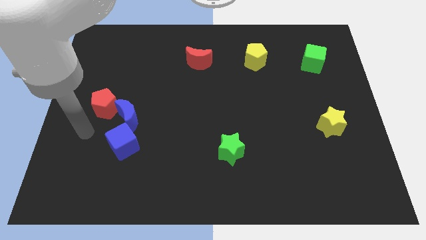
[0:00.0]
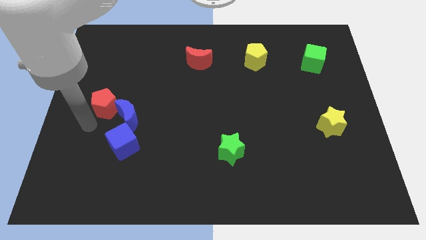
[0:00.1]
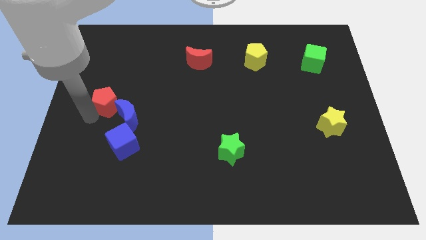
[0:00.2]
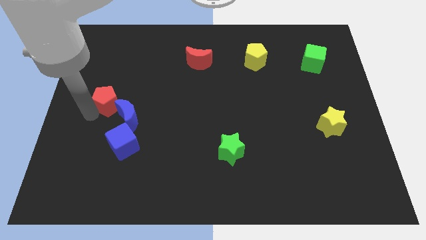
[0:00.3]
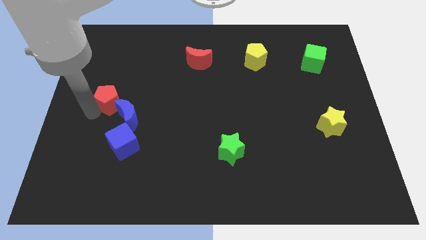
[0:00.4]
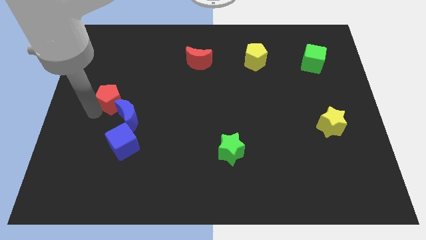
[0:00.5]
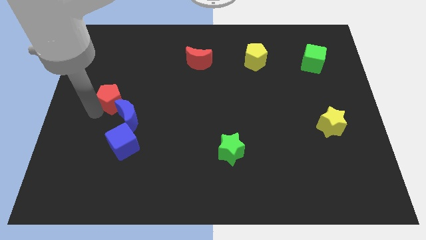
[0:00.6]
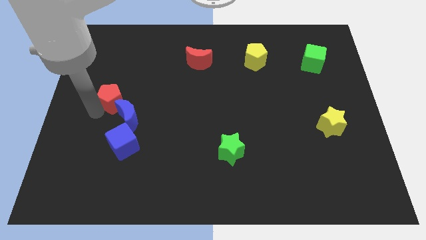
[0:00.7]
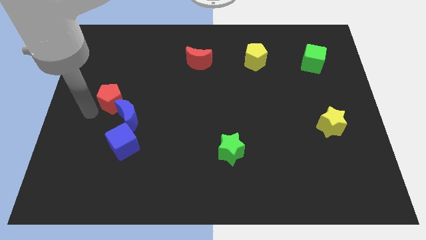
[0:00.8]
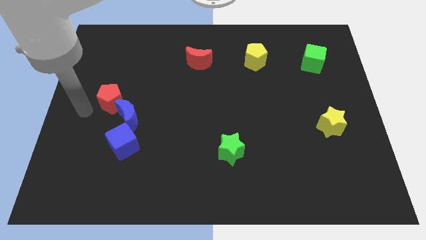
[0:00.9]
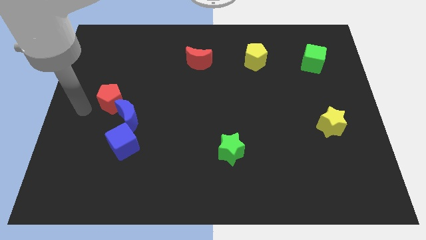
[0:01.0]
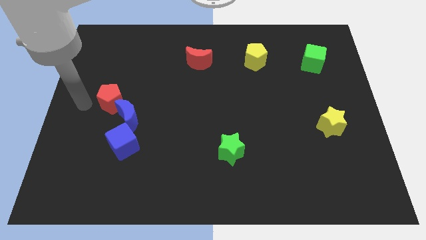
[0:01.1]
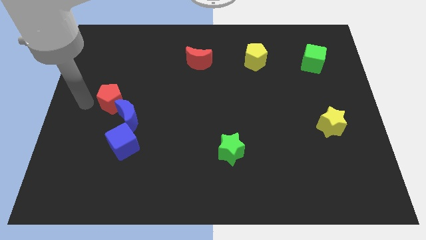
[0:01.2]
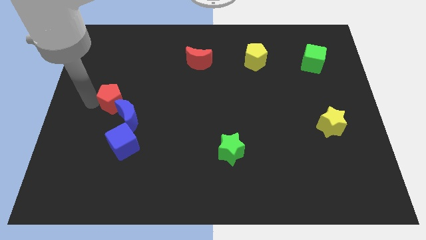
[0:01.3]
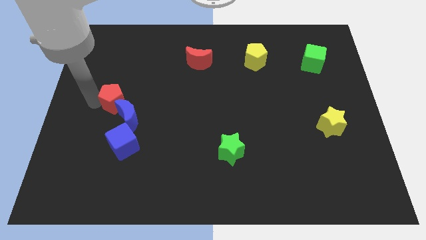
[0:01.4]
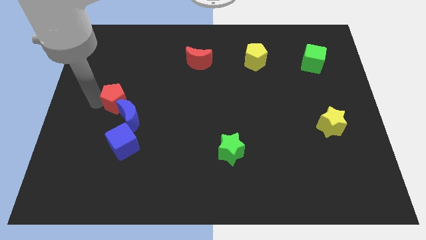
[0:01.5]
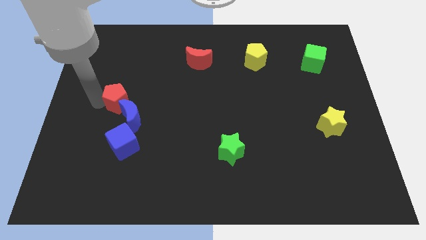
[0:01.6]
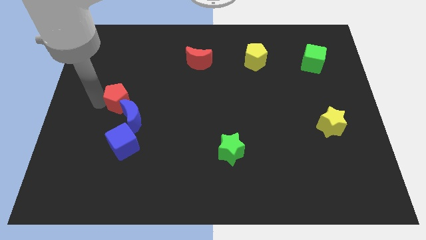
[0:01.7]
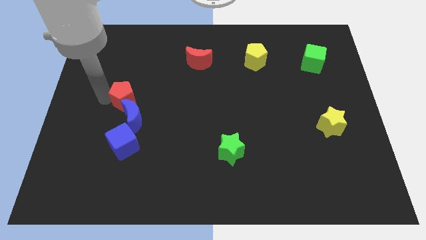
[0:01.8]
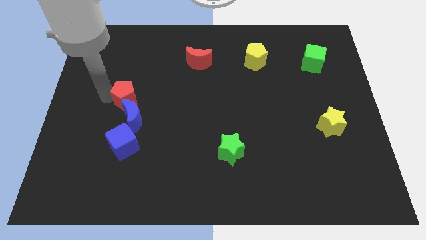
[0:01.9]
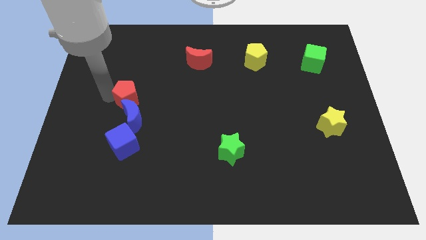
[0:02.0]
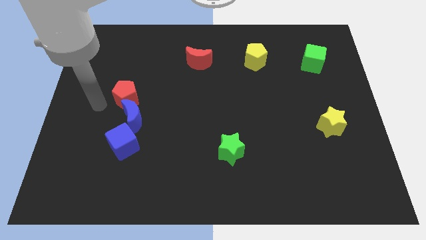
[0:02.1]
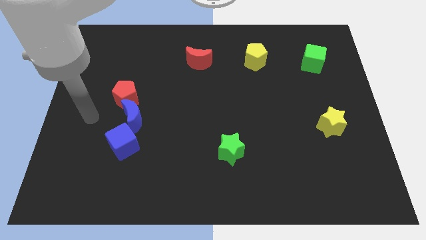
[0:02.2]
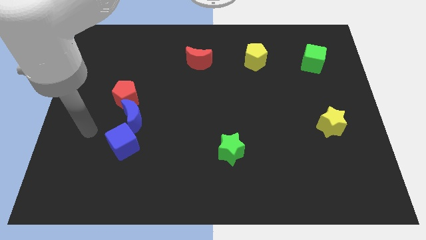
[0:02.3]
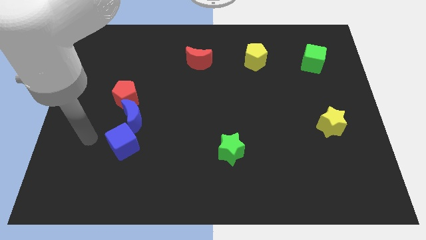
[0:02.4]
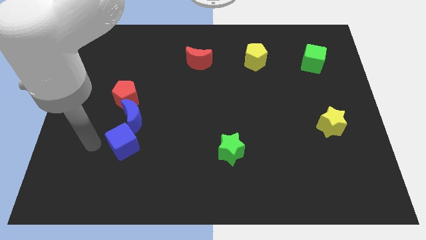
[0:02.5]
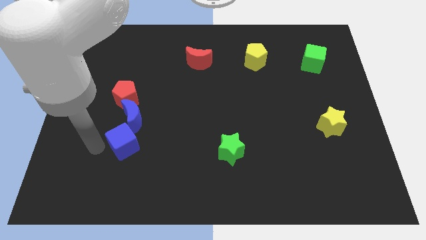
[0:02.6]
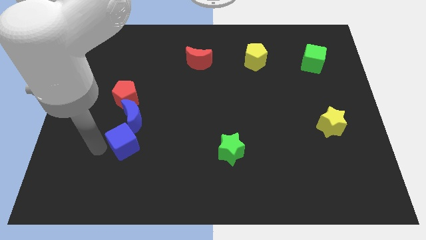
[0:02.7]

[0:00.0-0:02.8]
place the red pentagon above the blue moon in a diagonal form

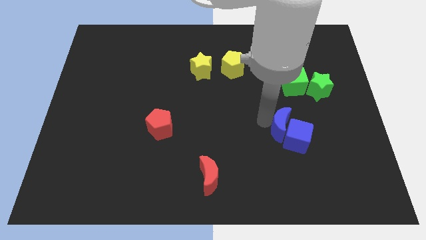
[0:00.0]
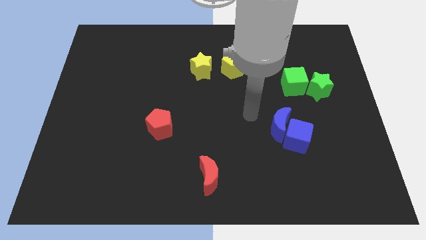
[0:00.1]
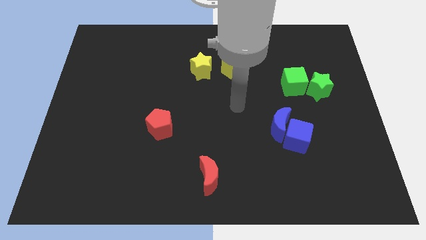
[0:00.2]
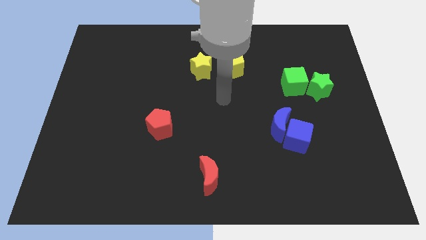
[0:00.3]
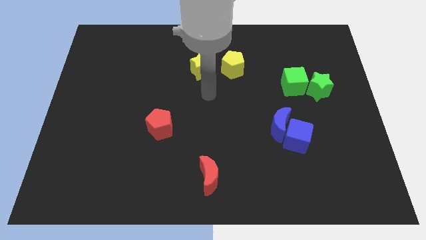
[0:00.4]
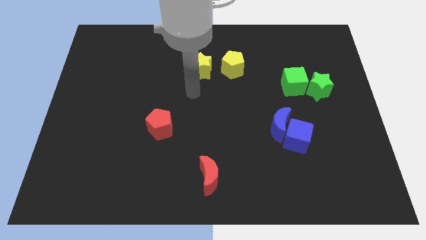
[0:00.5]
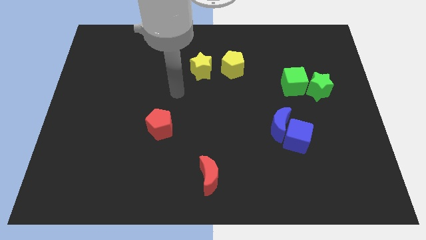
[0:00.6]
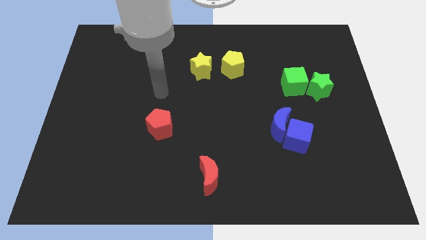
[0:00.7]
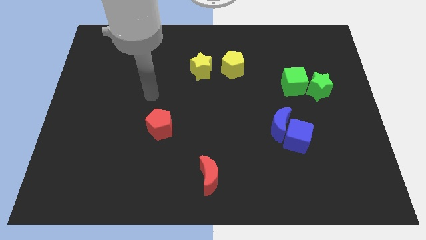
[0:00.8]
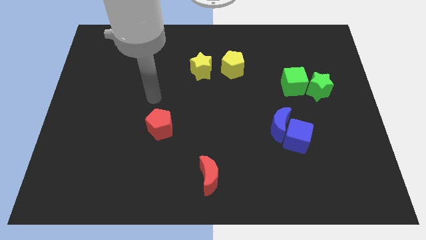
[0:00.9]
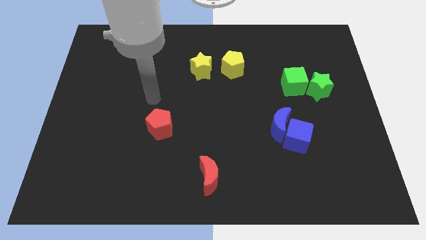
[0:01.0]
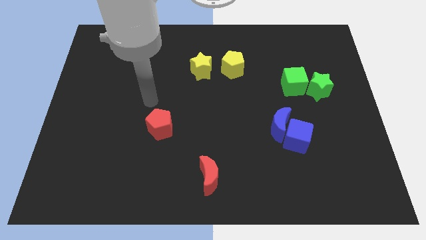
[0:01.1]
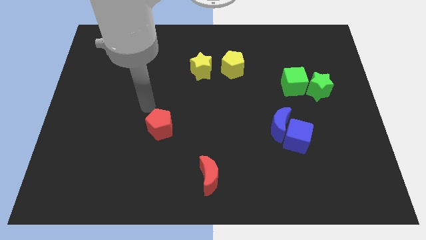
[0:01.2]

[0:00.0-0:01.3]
move your arm to the top of red pentagon

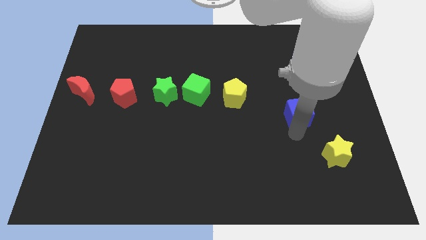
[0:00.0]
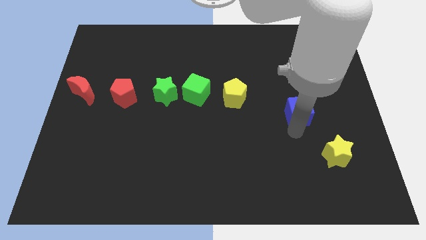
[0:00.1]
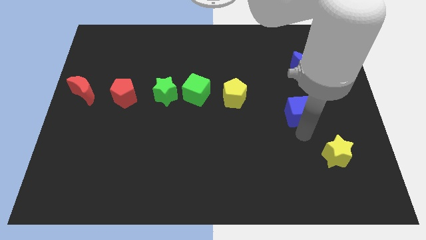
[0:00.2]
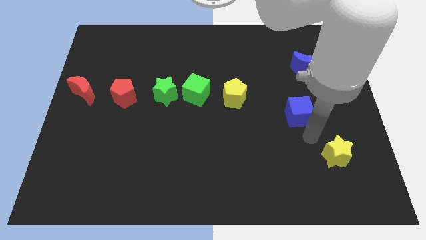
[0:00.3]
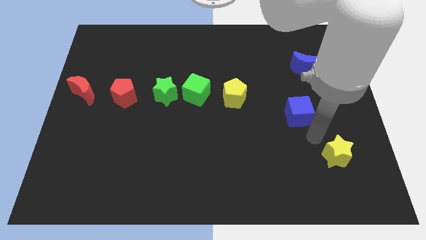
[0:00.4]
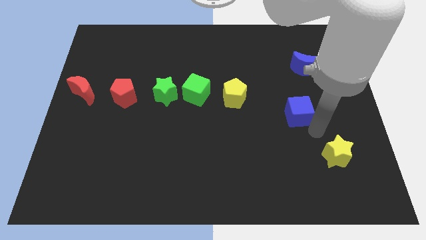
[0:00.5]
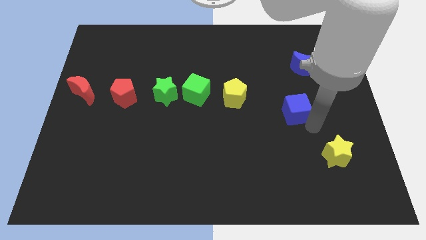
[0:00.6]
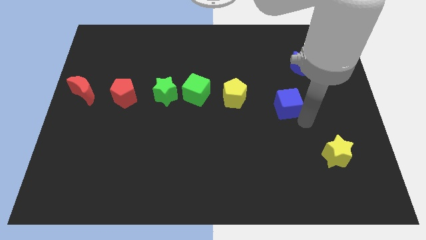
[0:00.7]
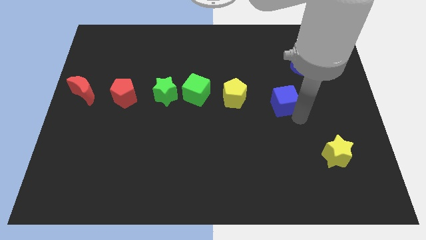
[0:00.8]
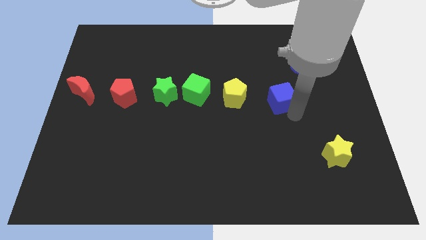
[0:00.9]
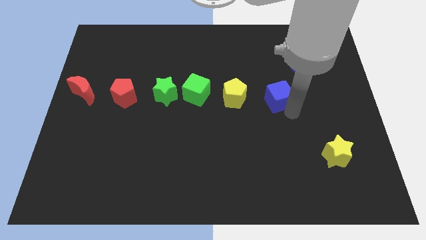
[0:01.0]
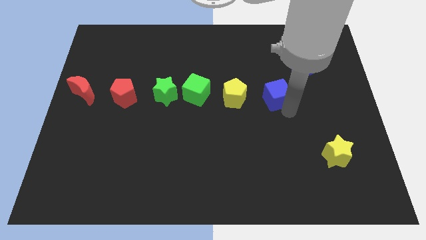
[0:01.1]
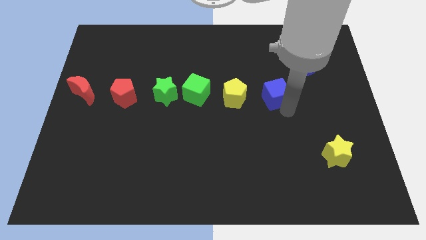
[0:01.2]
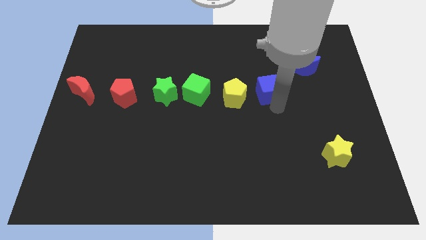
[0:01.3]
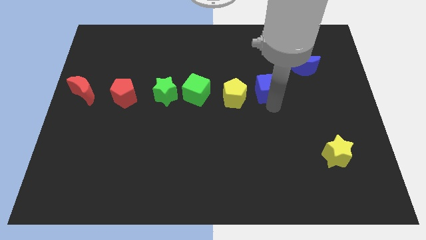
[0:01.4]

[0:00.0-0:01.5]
place the blue square to the right of the yellow pentagon

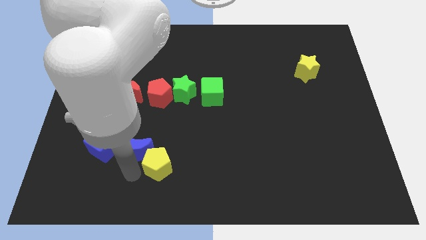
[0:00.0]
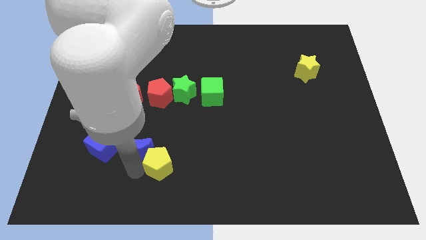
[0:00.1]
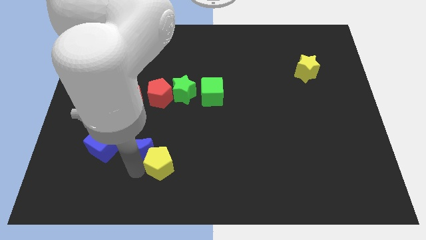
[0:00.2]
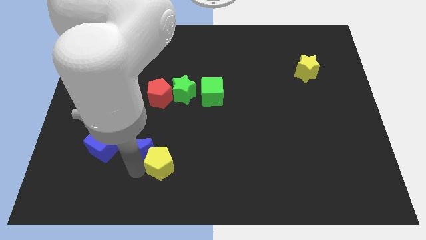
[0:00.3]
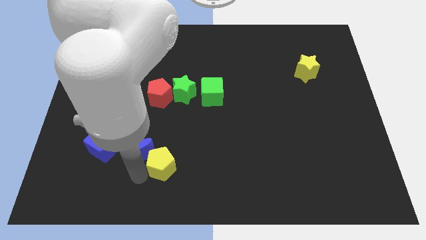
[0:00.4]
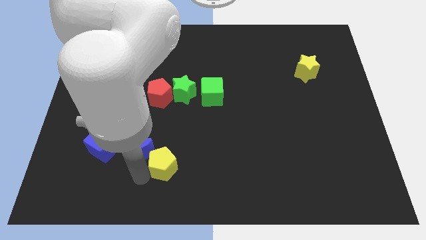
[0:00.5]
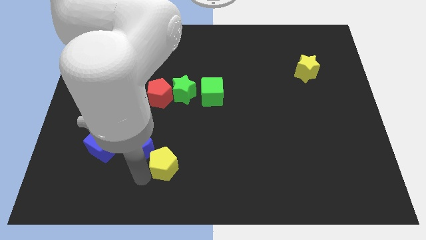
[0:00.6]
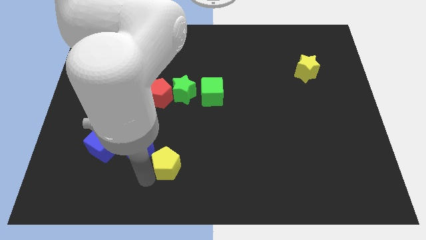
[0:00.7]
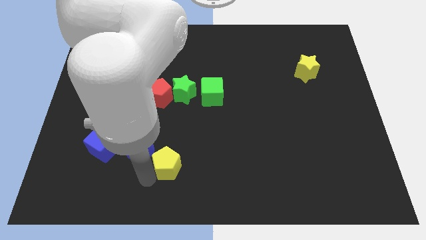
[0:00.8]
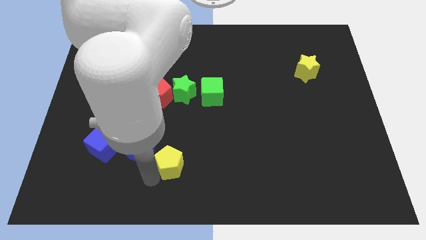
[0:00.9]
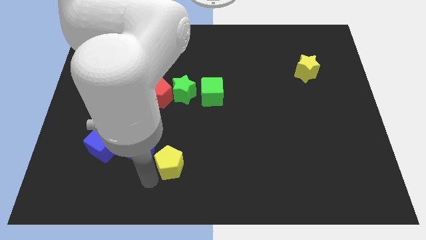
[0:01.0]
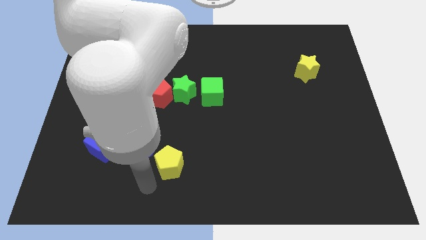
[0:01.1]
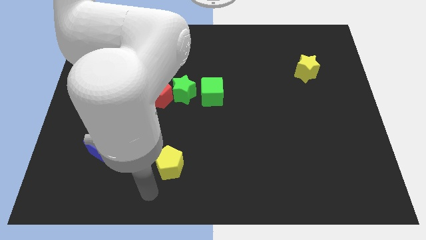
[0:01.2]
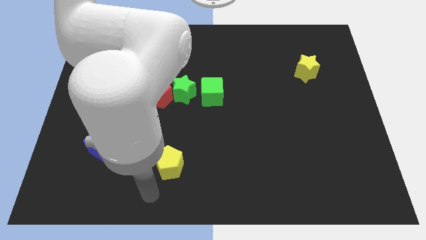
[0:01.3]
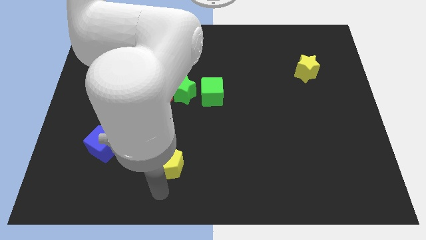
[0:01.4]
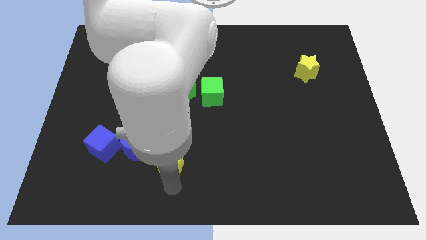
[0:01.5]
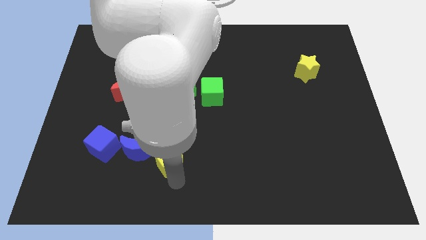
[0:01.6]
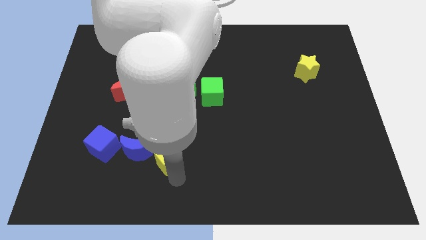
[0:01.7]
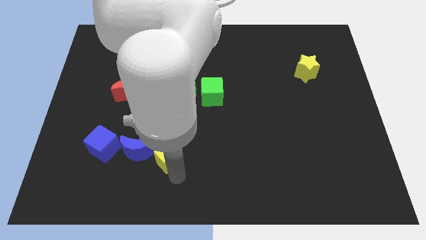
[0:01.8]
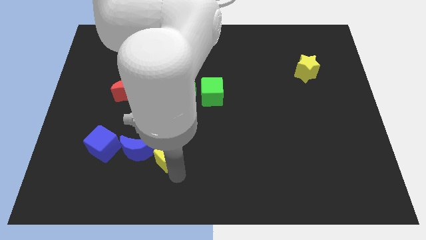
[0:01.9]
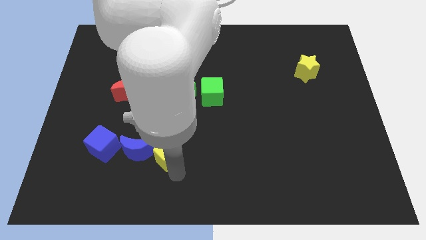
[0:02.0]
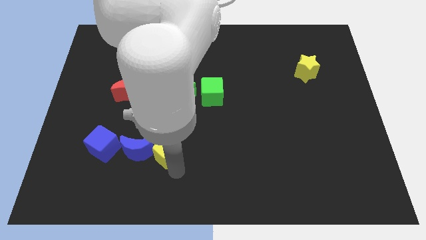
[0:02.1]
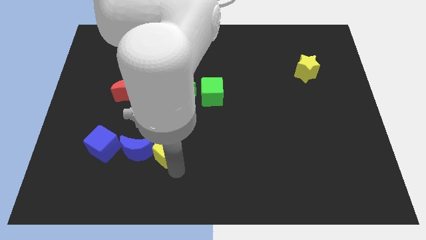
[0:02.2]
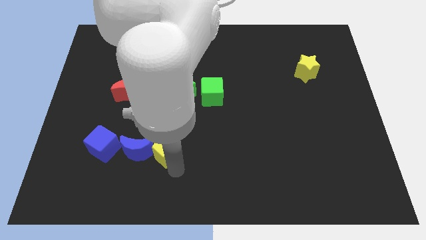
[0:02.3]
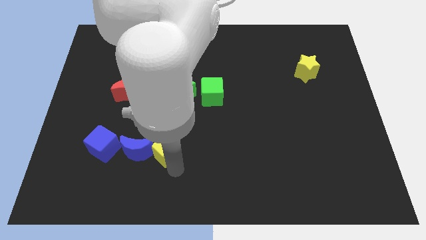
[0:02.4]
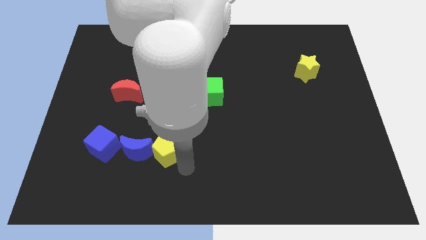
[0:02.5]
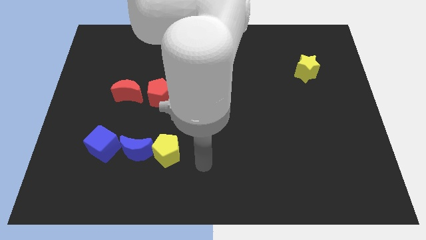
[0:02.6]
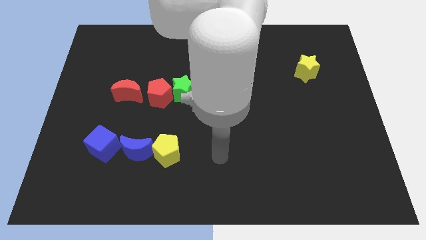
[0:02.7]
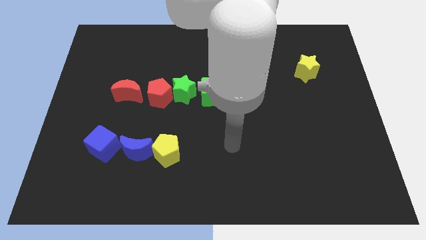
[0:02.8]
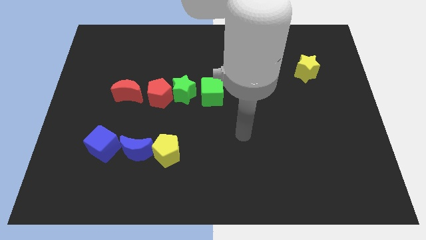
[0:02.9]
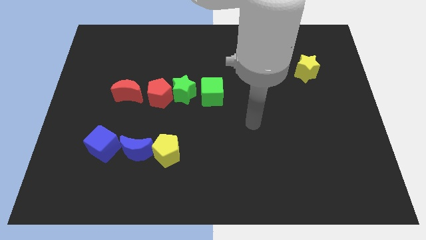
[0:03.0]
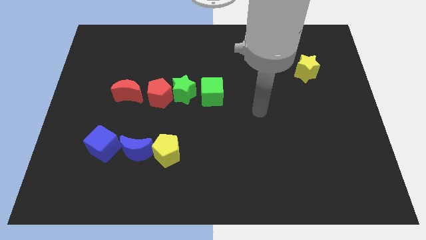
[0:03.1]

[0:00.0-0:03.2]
move yellow pentagon to the right of blue moon

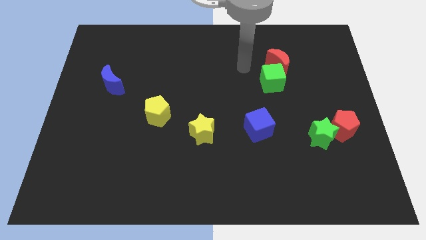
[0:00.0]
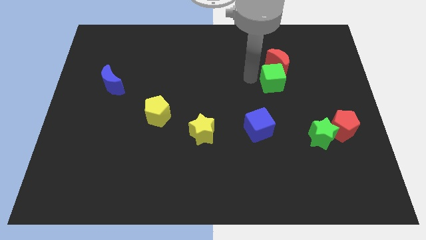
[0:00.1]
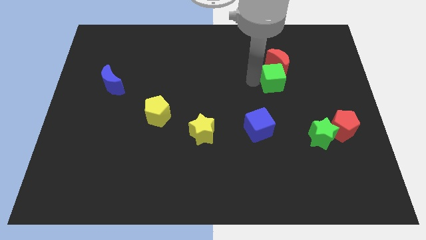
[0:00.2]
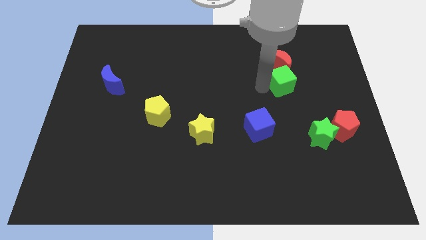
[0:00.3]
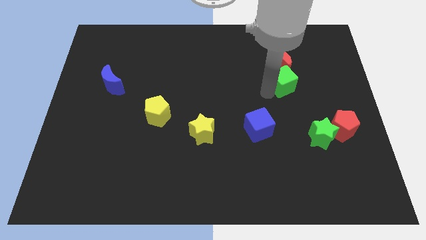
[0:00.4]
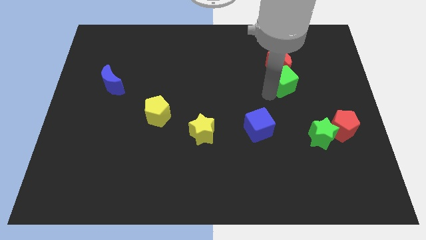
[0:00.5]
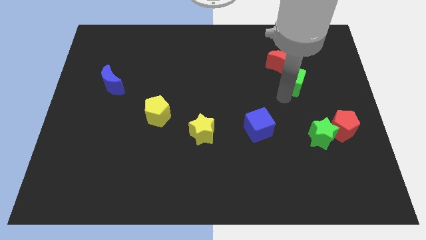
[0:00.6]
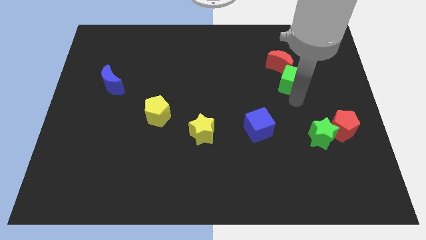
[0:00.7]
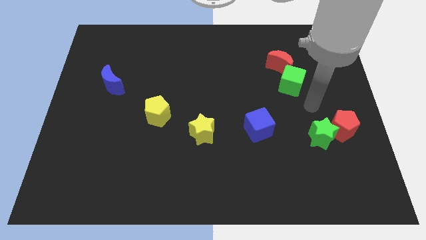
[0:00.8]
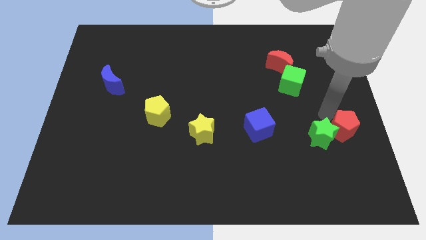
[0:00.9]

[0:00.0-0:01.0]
push the green cube towards right center of the board
